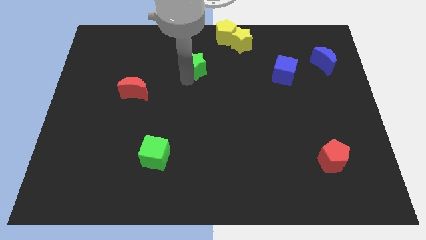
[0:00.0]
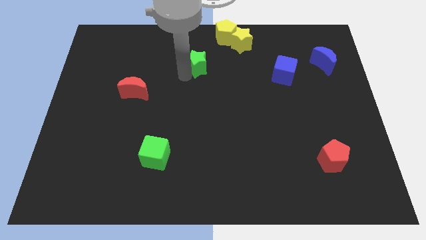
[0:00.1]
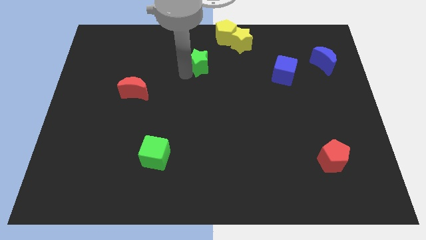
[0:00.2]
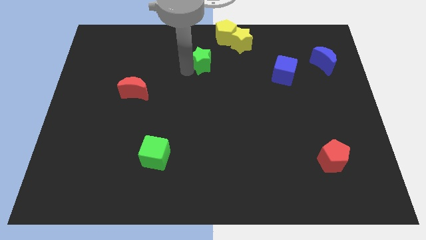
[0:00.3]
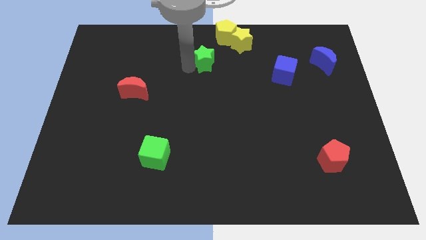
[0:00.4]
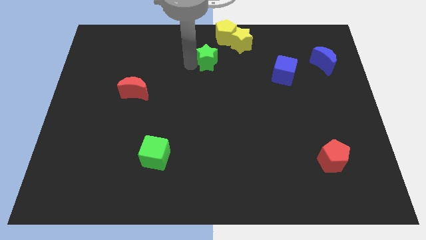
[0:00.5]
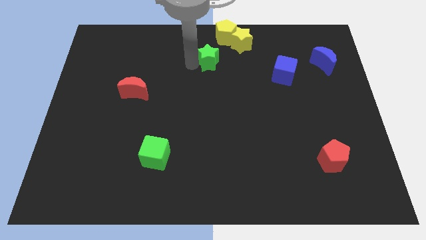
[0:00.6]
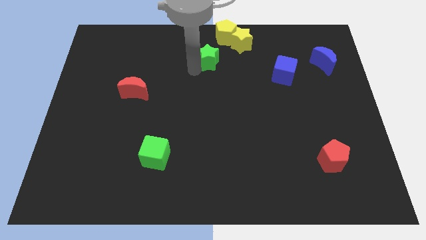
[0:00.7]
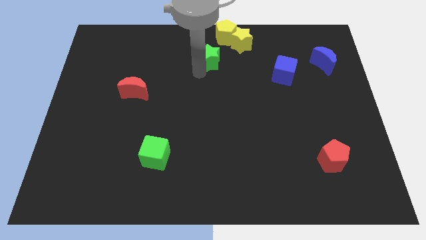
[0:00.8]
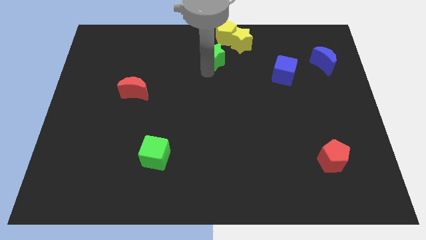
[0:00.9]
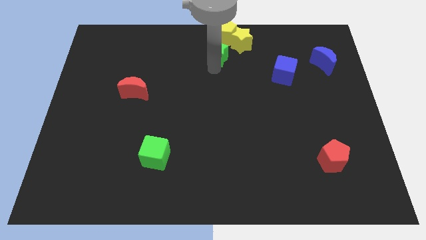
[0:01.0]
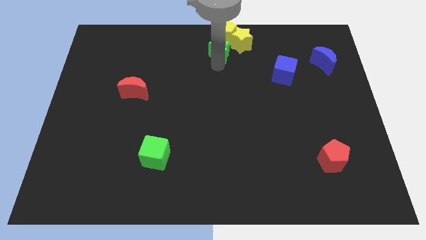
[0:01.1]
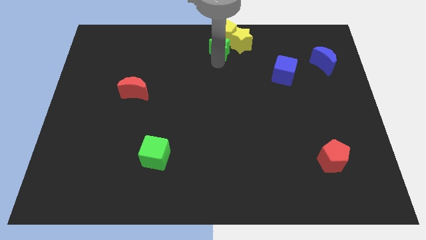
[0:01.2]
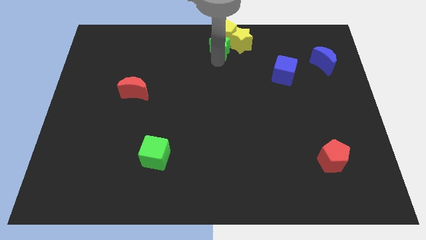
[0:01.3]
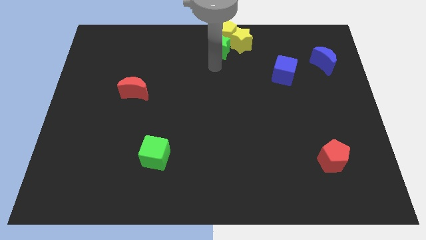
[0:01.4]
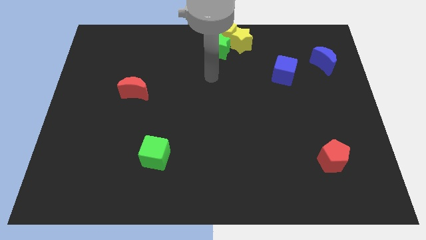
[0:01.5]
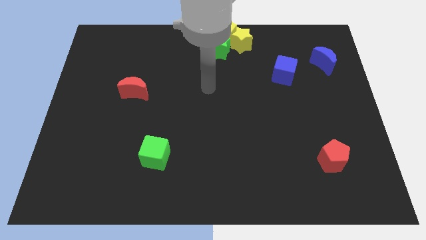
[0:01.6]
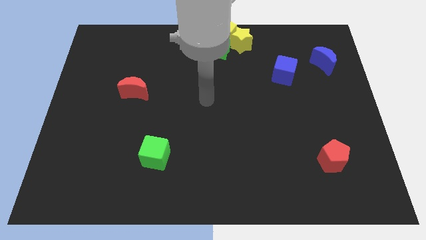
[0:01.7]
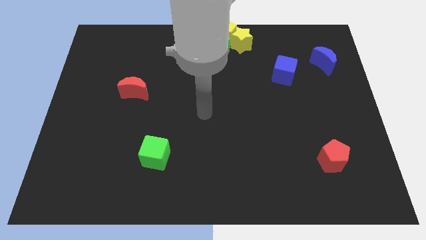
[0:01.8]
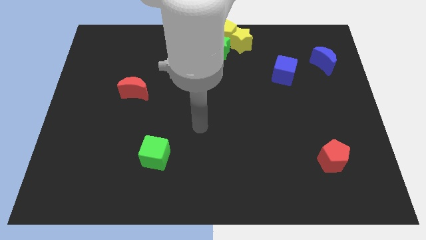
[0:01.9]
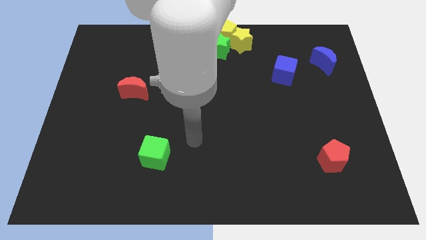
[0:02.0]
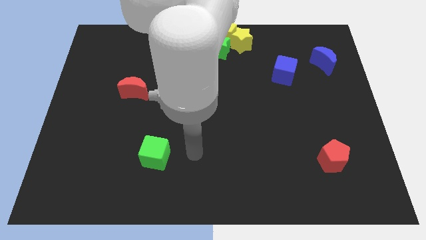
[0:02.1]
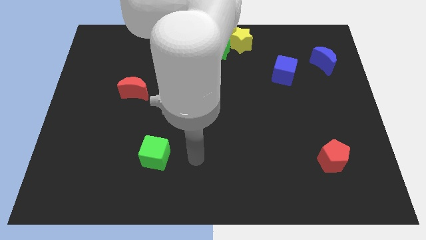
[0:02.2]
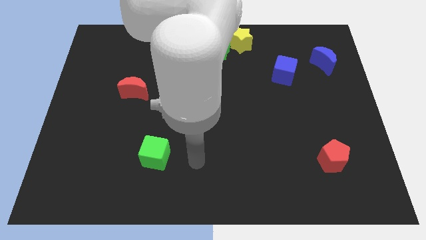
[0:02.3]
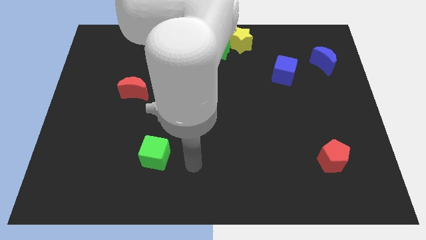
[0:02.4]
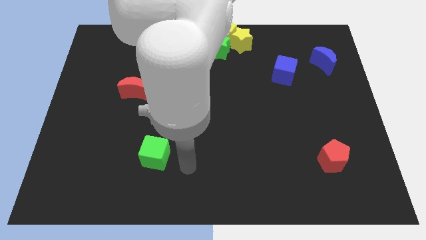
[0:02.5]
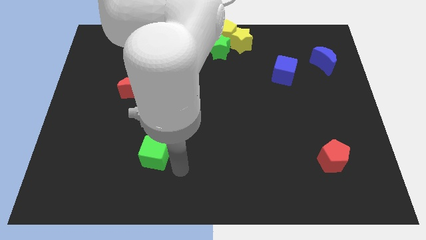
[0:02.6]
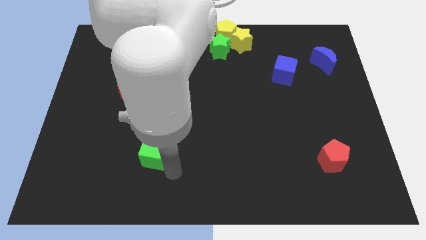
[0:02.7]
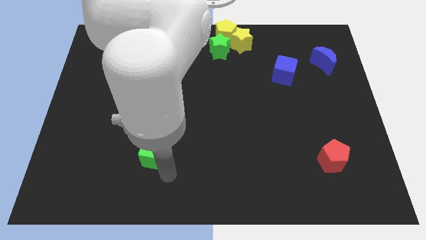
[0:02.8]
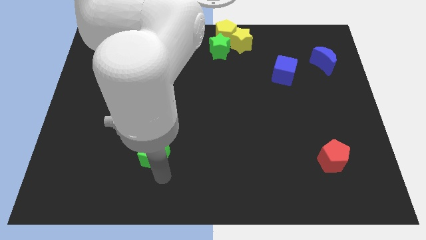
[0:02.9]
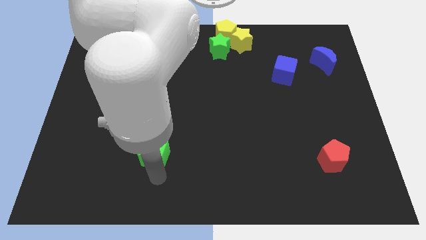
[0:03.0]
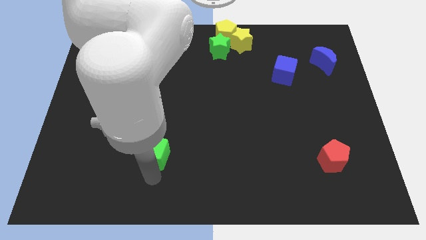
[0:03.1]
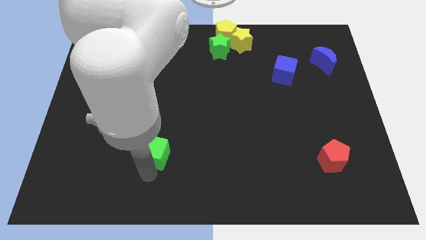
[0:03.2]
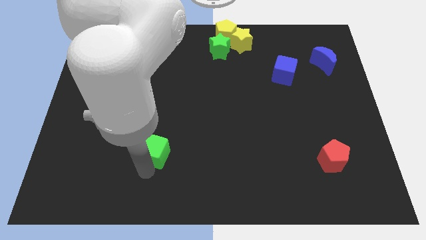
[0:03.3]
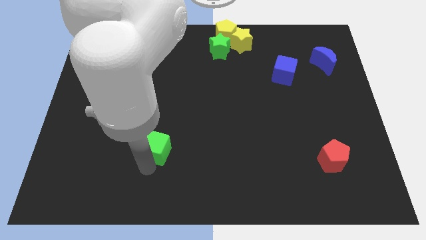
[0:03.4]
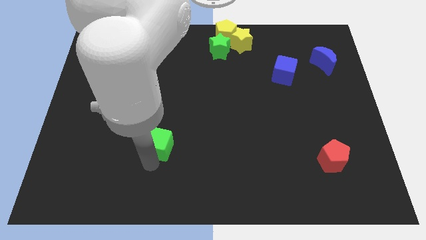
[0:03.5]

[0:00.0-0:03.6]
place the green star at the bottom of the yellow pentagon

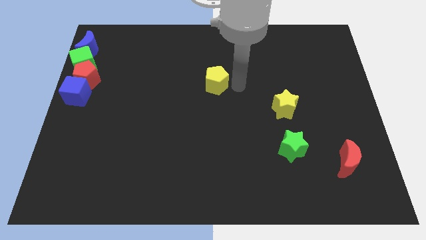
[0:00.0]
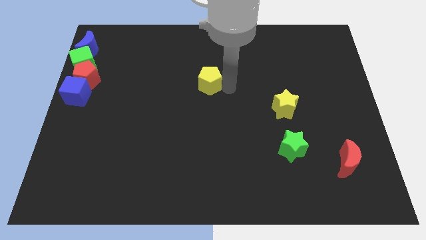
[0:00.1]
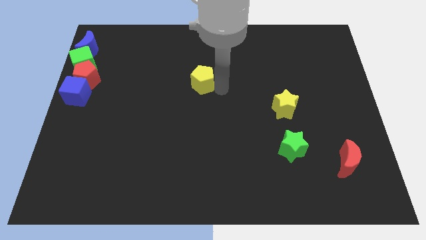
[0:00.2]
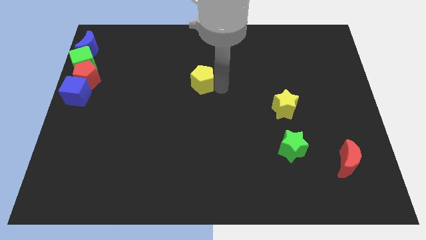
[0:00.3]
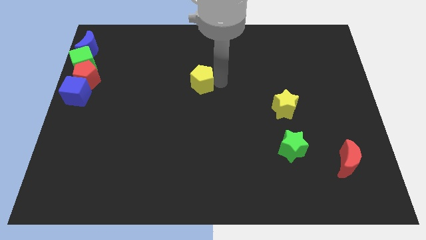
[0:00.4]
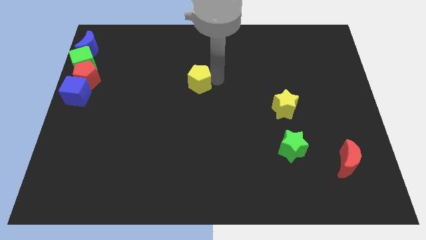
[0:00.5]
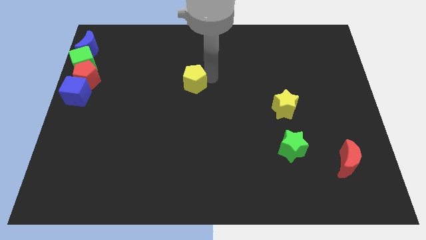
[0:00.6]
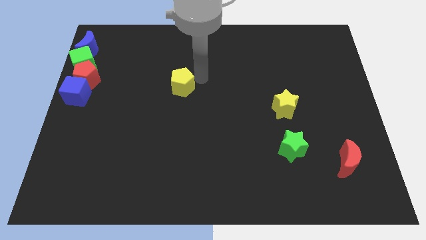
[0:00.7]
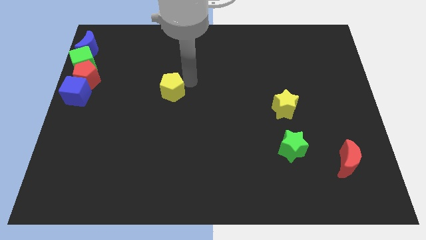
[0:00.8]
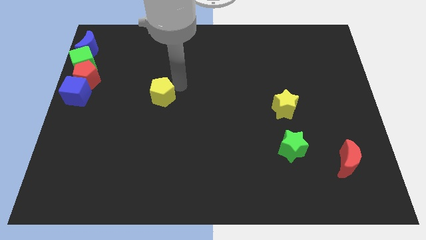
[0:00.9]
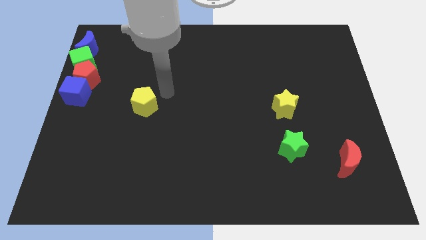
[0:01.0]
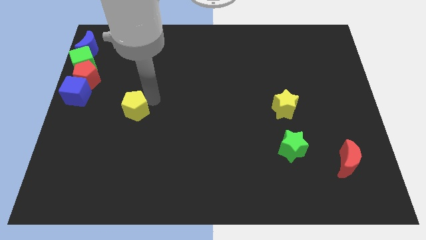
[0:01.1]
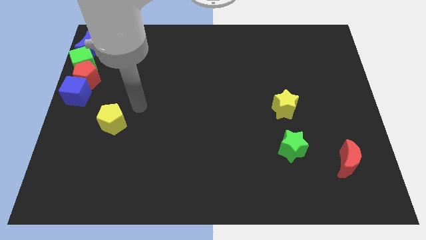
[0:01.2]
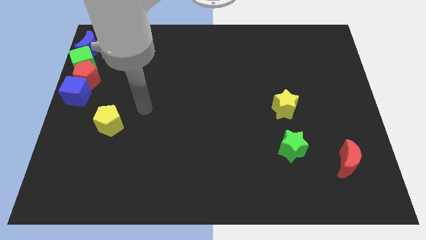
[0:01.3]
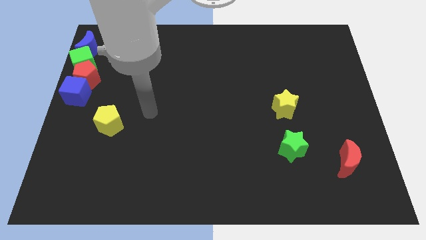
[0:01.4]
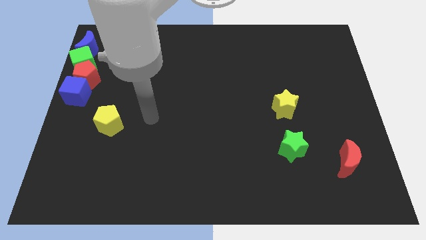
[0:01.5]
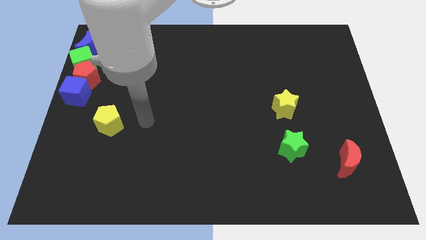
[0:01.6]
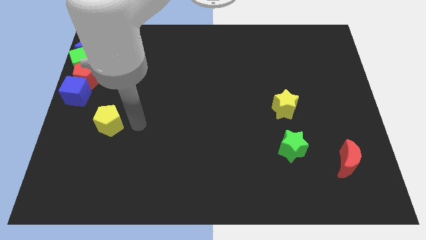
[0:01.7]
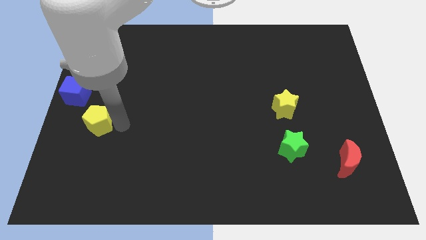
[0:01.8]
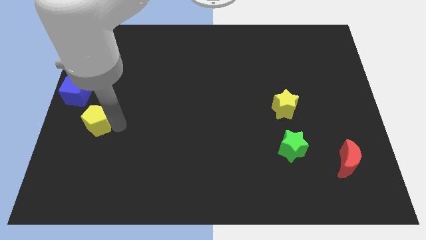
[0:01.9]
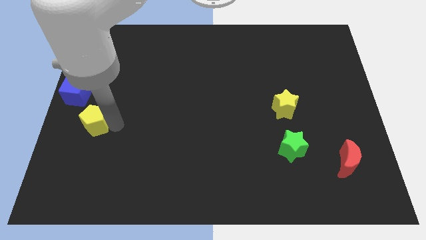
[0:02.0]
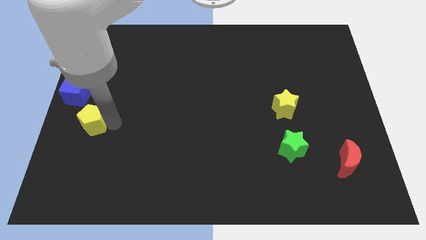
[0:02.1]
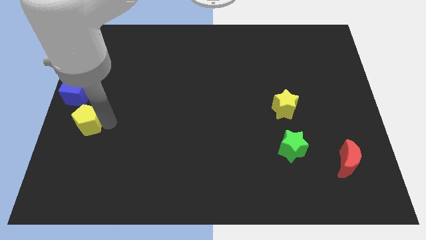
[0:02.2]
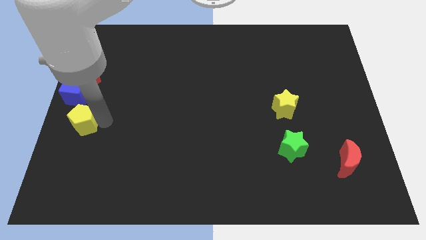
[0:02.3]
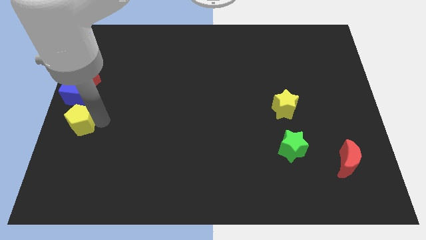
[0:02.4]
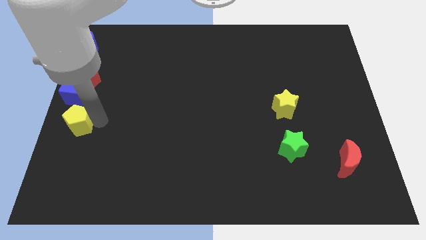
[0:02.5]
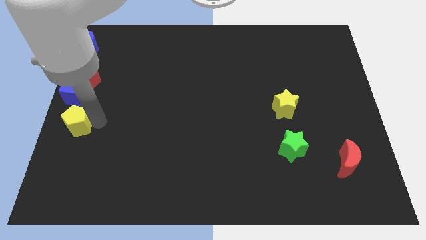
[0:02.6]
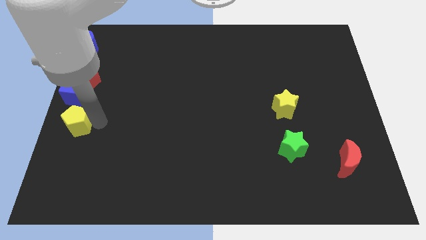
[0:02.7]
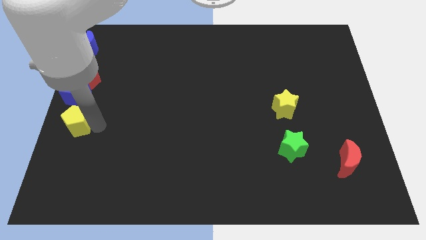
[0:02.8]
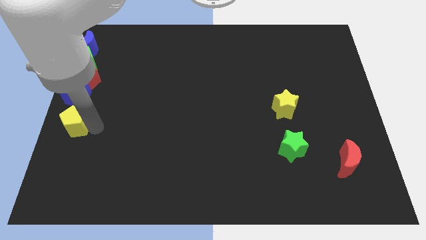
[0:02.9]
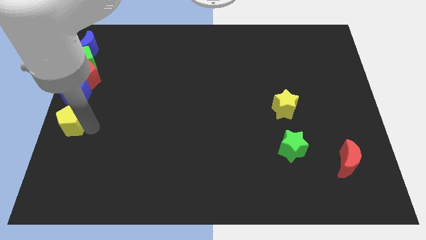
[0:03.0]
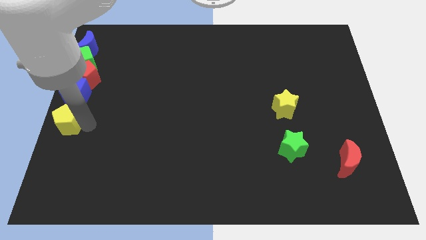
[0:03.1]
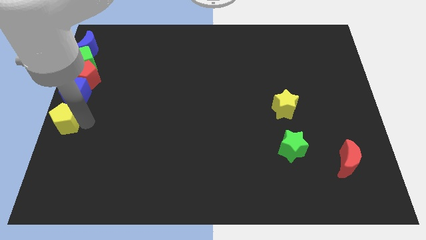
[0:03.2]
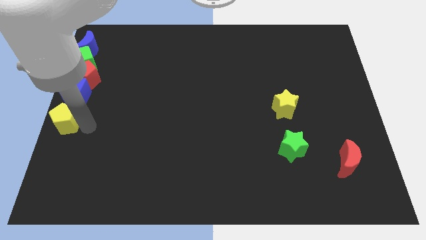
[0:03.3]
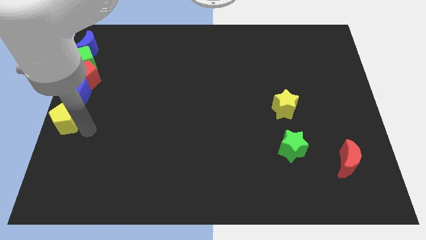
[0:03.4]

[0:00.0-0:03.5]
move the yellow pentagon to the bottom of the blue cube

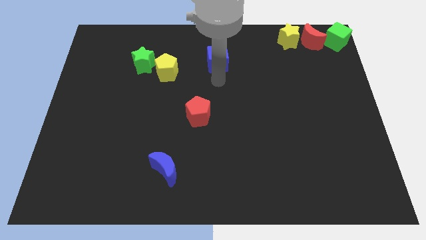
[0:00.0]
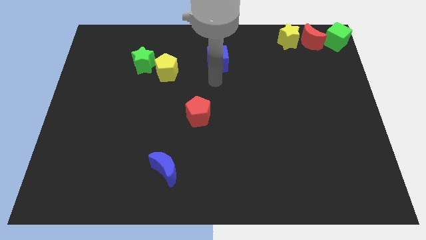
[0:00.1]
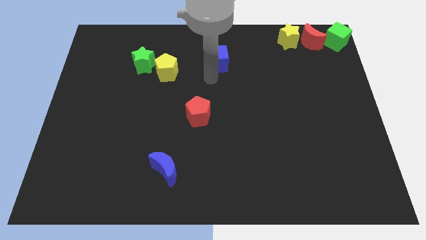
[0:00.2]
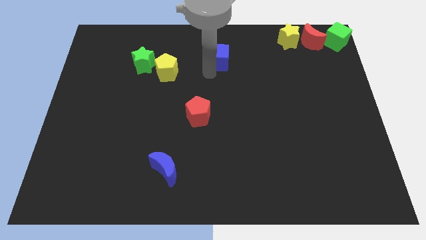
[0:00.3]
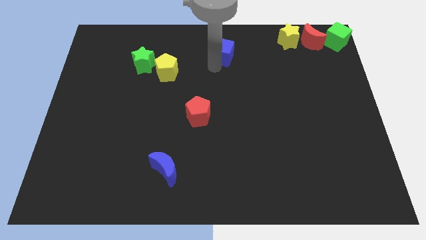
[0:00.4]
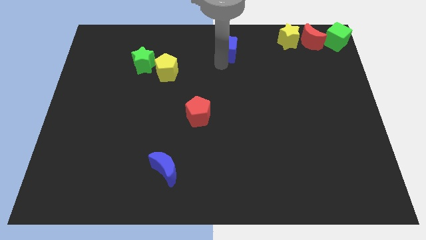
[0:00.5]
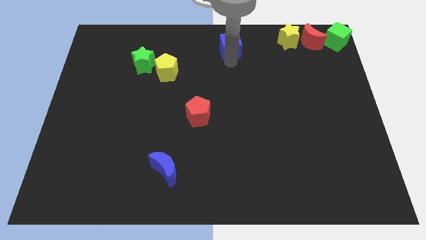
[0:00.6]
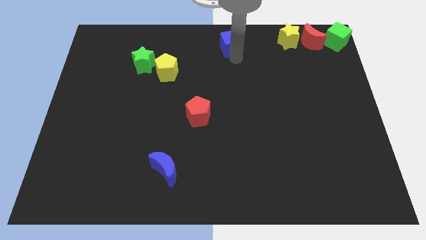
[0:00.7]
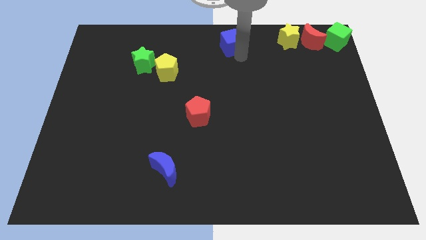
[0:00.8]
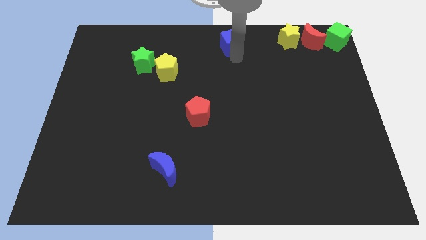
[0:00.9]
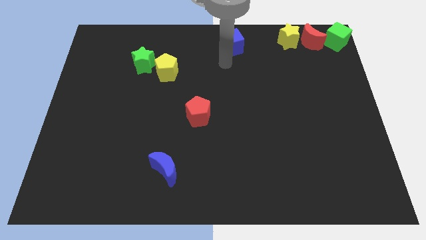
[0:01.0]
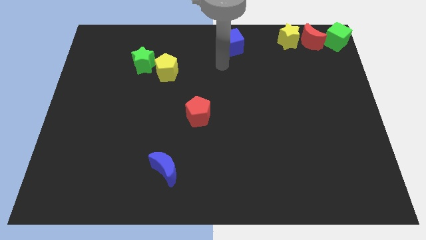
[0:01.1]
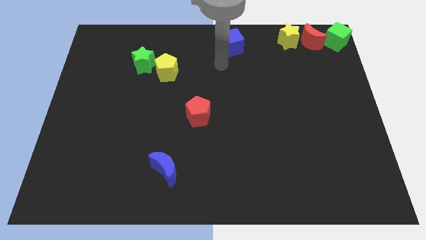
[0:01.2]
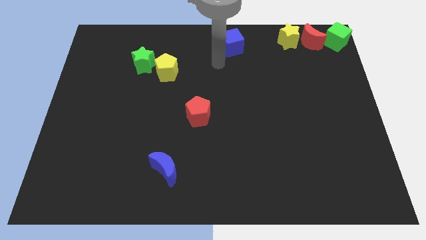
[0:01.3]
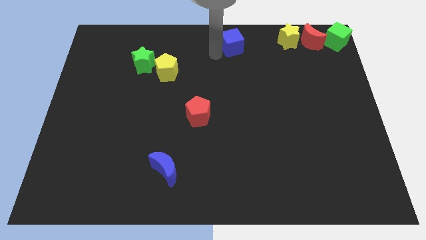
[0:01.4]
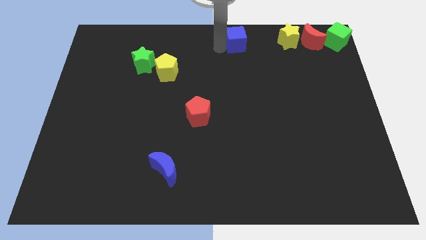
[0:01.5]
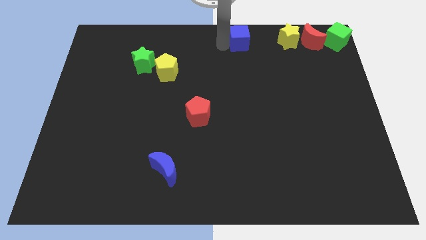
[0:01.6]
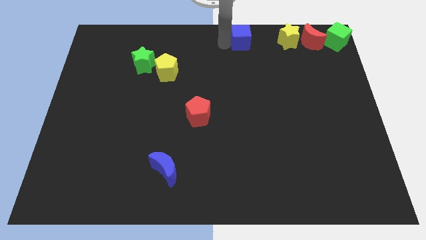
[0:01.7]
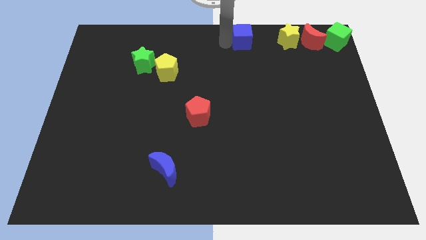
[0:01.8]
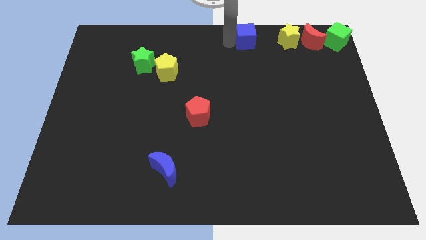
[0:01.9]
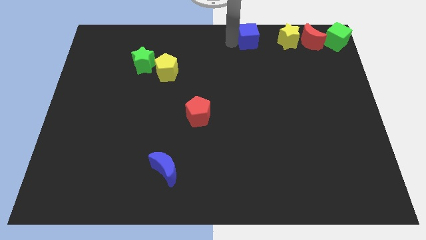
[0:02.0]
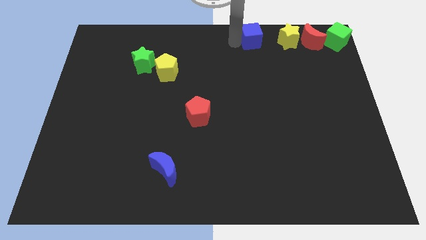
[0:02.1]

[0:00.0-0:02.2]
push the blue cube to the left of the yellow star
